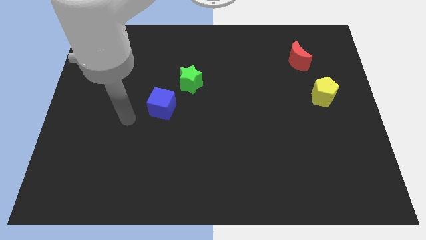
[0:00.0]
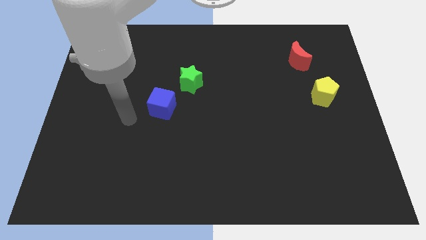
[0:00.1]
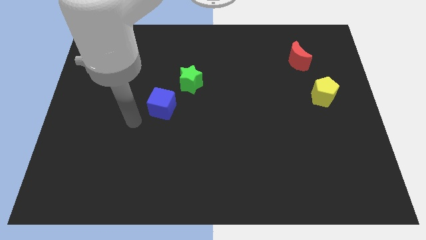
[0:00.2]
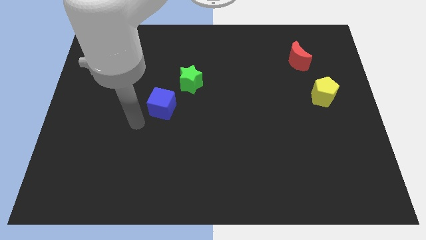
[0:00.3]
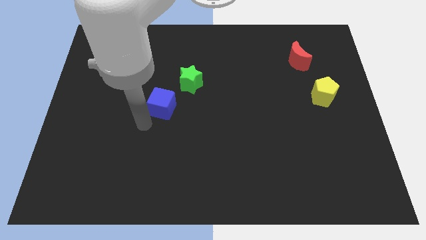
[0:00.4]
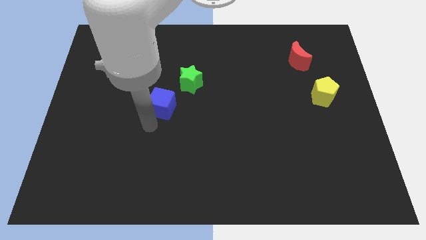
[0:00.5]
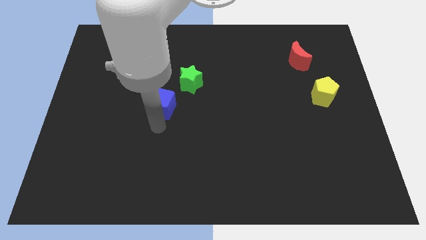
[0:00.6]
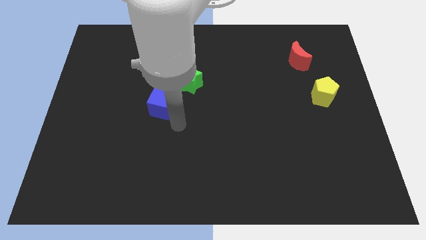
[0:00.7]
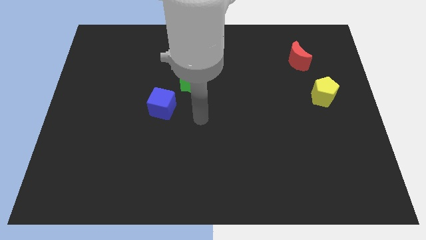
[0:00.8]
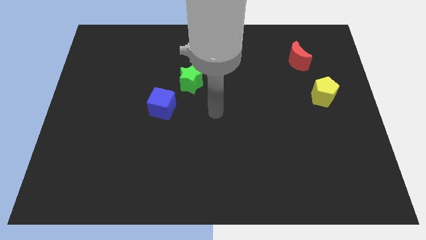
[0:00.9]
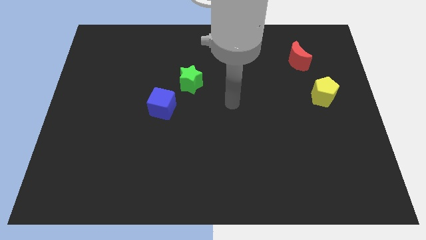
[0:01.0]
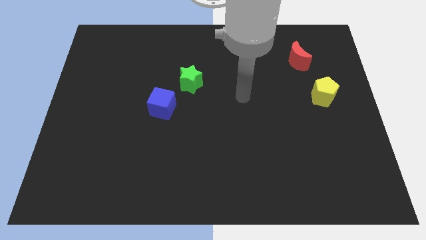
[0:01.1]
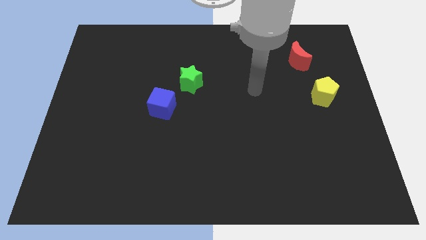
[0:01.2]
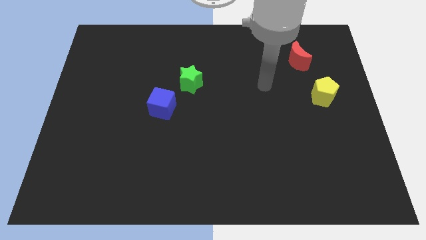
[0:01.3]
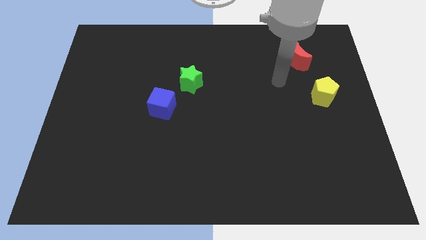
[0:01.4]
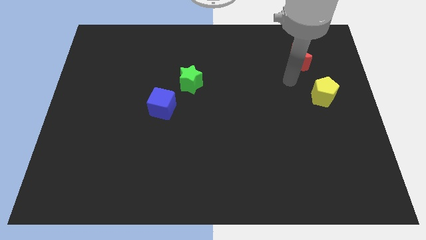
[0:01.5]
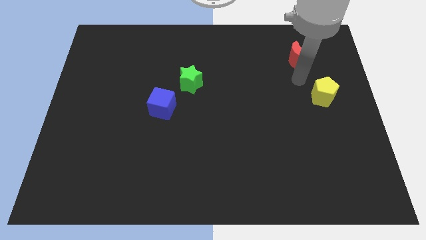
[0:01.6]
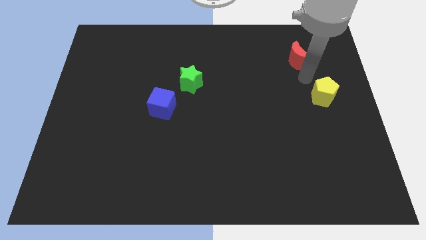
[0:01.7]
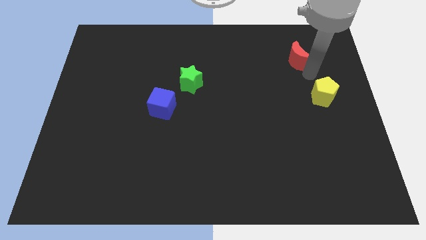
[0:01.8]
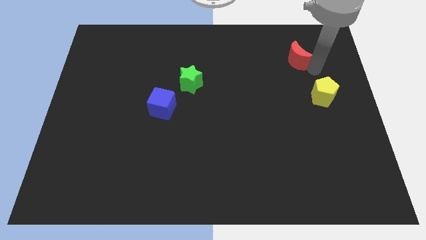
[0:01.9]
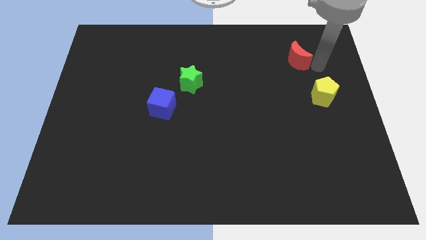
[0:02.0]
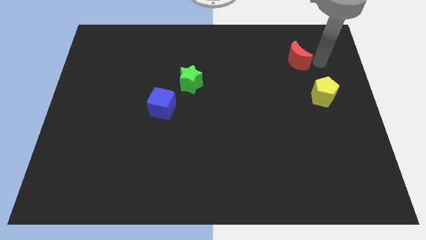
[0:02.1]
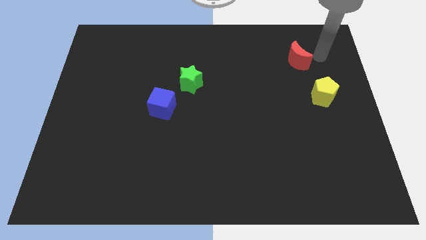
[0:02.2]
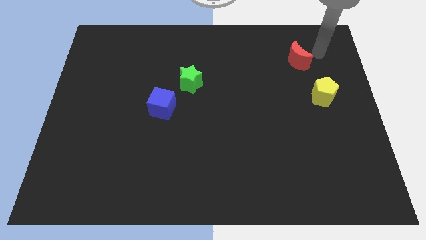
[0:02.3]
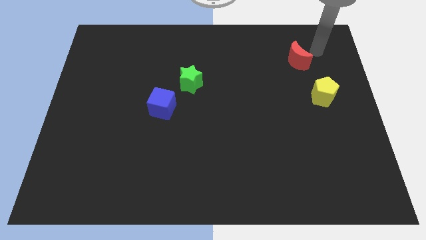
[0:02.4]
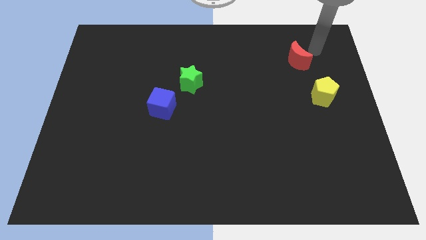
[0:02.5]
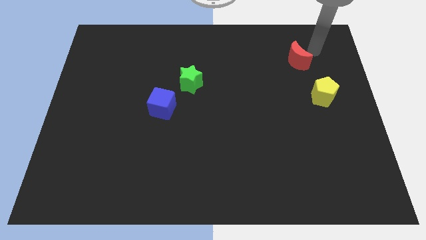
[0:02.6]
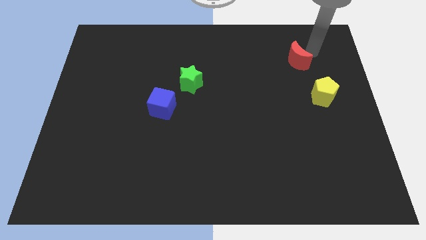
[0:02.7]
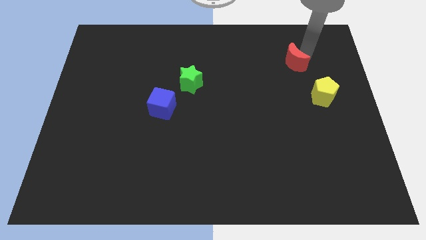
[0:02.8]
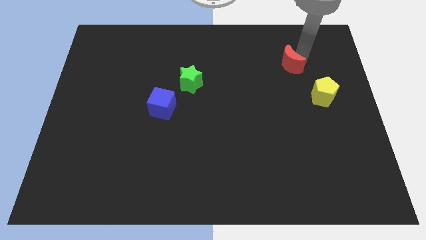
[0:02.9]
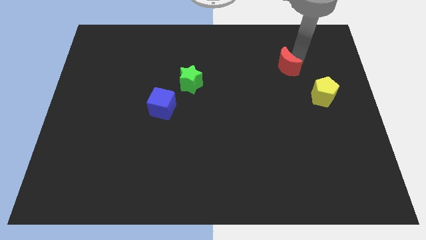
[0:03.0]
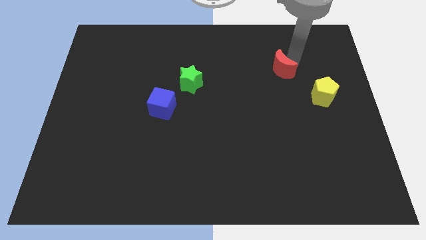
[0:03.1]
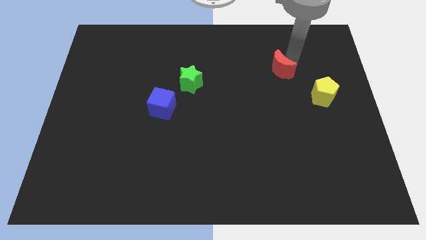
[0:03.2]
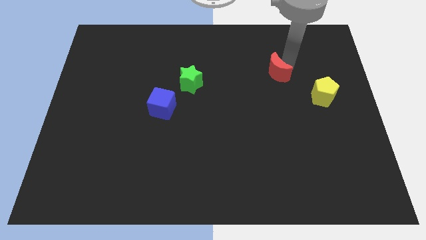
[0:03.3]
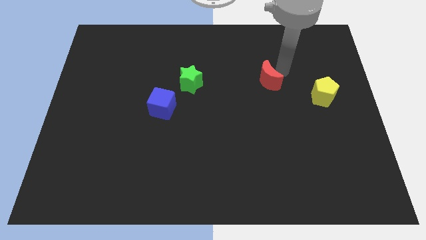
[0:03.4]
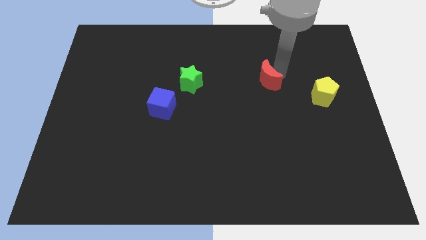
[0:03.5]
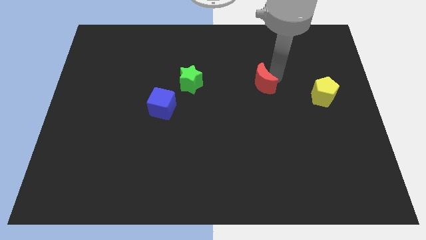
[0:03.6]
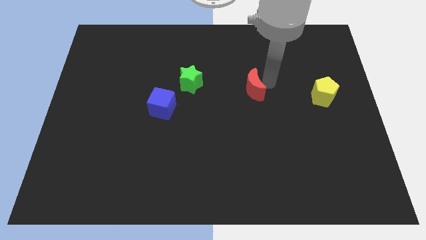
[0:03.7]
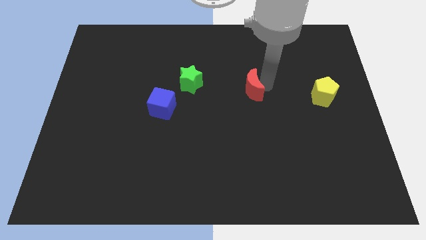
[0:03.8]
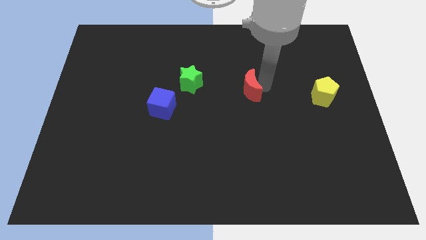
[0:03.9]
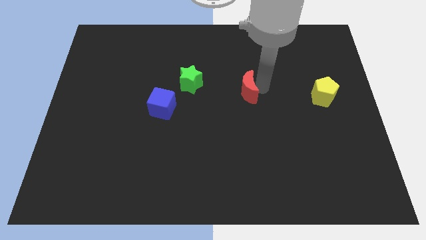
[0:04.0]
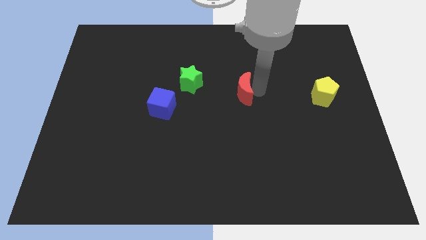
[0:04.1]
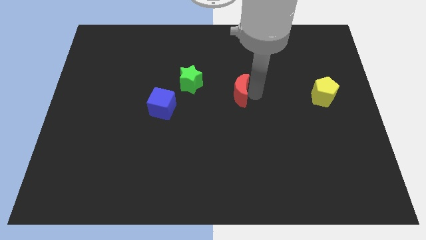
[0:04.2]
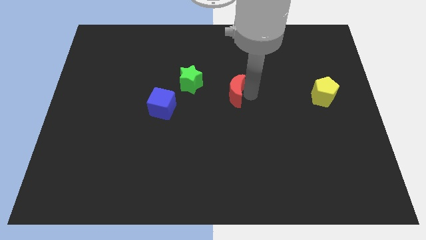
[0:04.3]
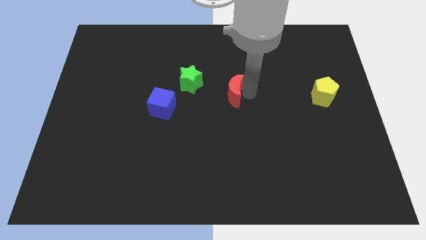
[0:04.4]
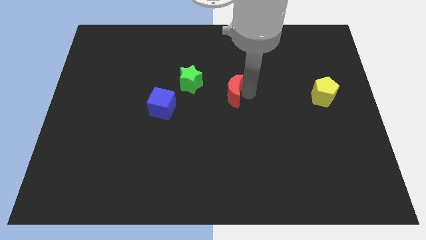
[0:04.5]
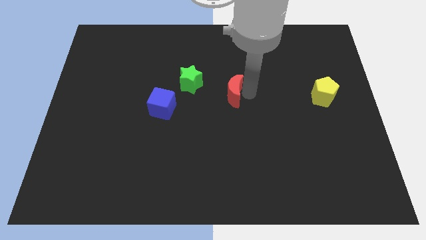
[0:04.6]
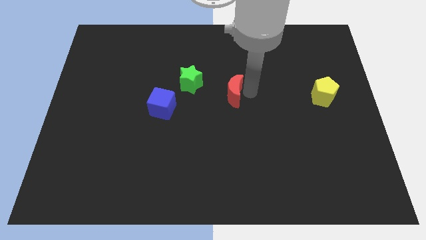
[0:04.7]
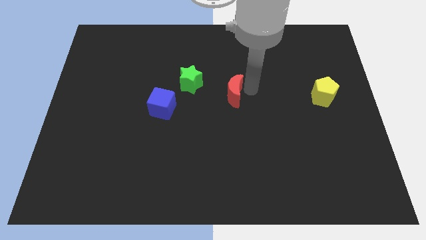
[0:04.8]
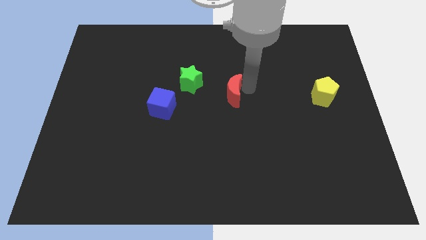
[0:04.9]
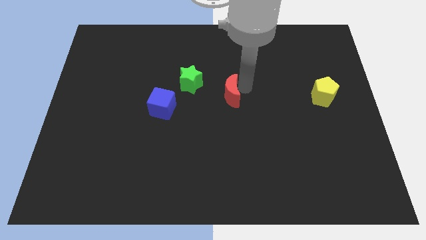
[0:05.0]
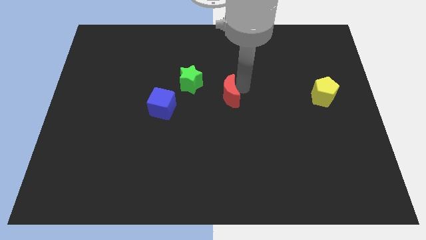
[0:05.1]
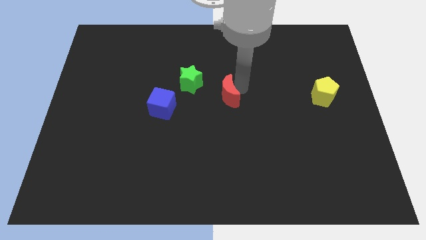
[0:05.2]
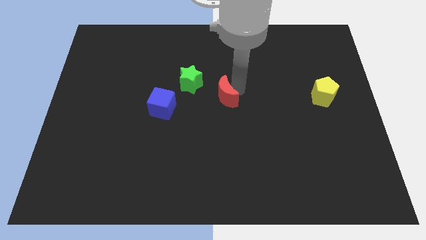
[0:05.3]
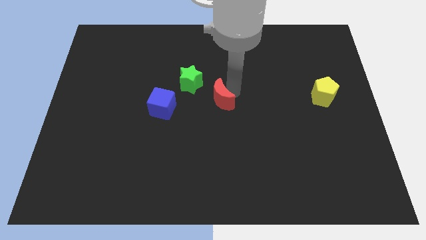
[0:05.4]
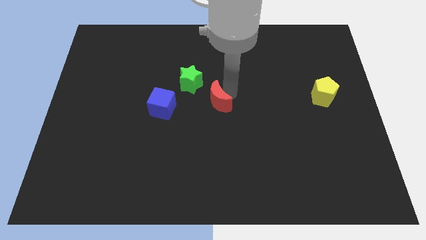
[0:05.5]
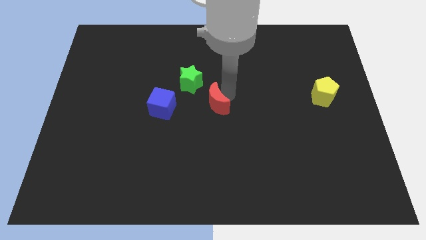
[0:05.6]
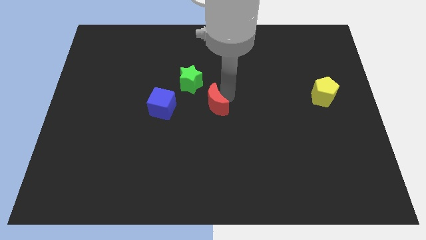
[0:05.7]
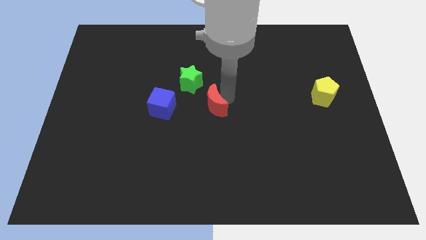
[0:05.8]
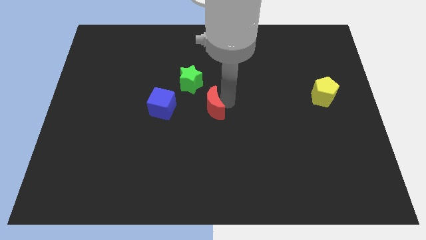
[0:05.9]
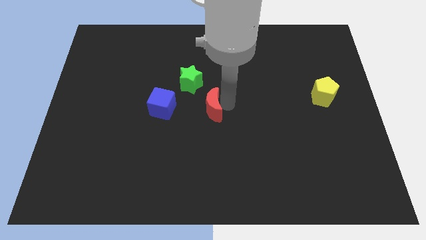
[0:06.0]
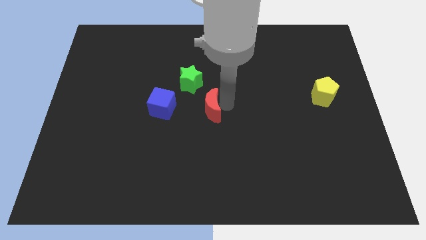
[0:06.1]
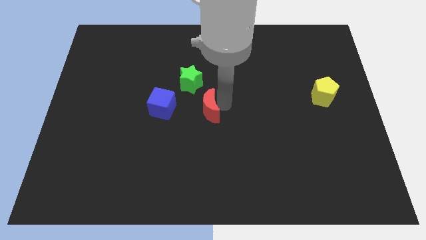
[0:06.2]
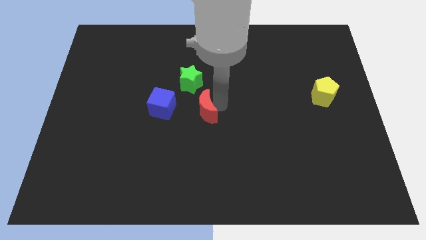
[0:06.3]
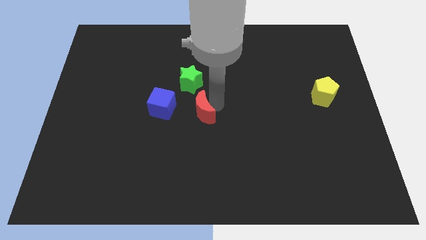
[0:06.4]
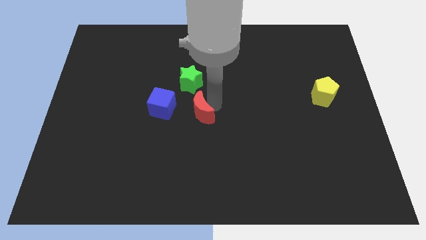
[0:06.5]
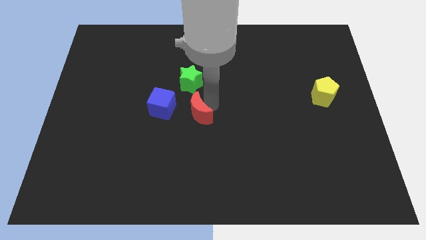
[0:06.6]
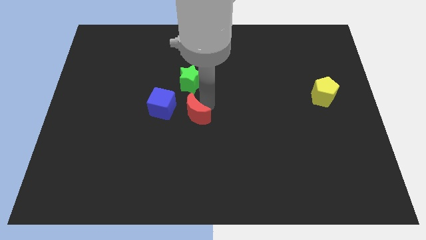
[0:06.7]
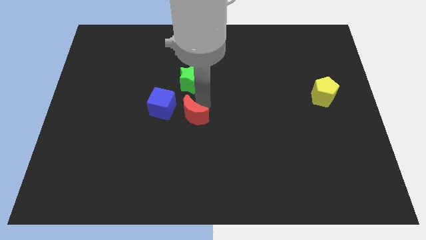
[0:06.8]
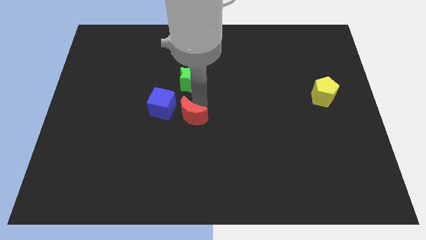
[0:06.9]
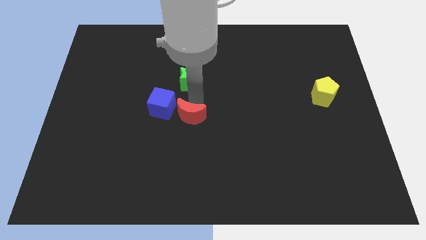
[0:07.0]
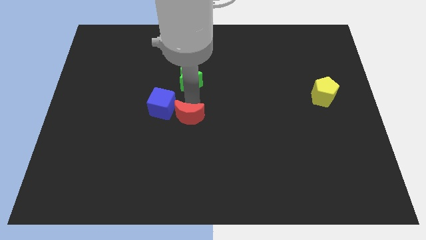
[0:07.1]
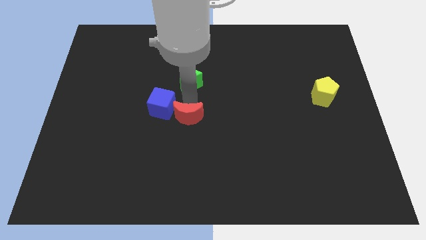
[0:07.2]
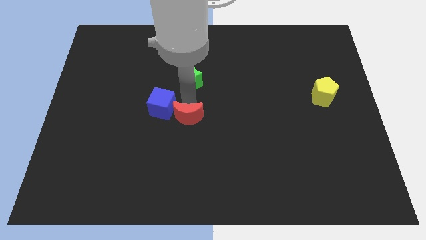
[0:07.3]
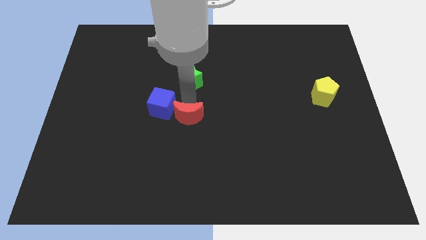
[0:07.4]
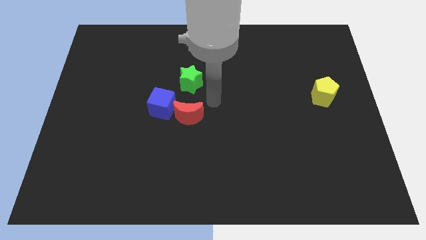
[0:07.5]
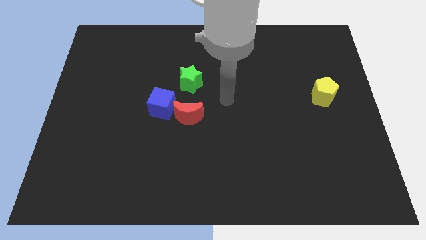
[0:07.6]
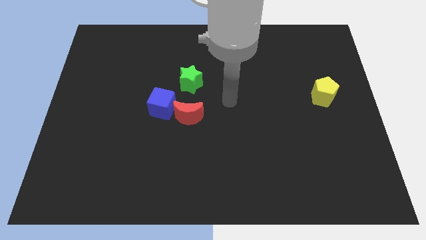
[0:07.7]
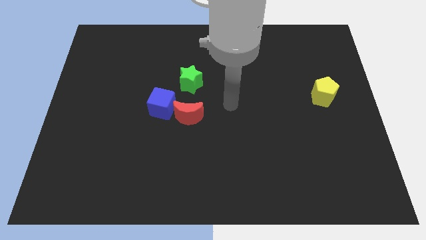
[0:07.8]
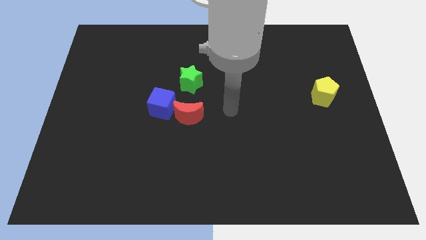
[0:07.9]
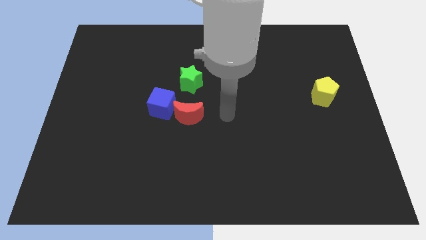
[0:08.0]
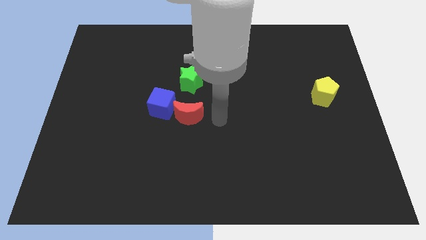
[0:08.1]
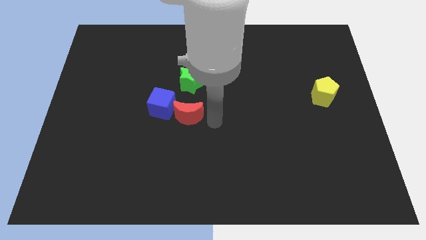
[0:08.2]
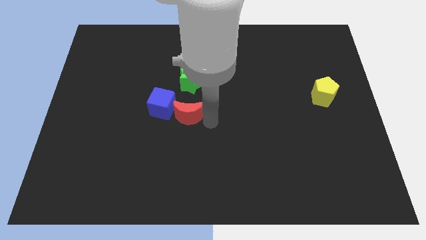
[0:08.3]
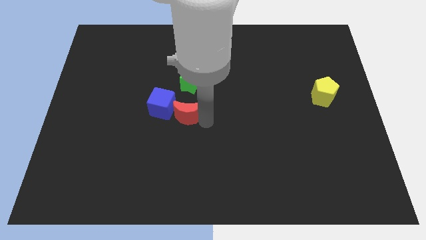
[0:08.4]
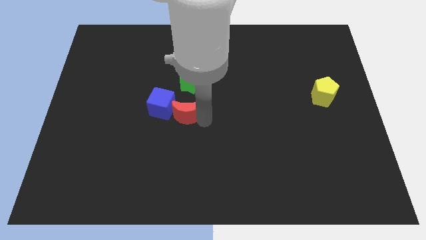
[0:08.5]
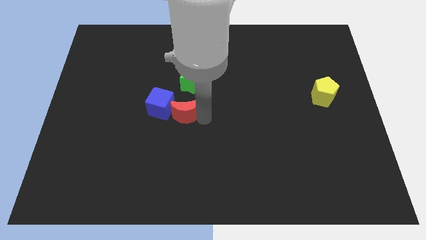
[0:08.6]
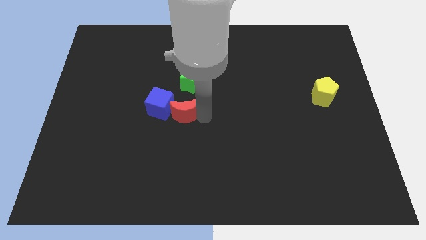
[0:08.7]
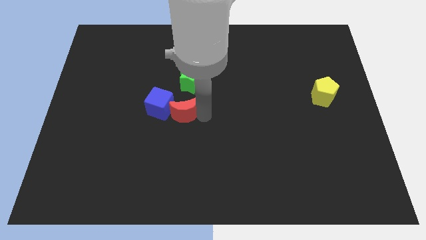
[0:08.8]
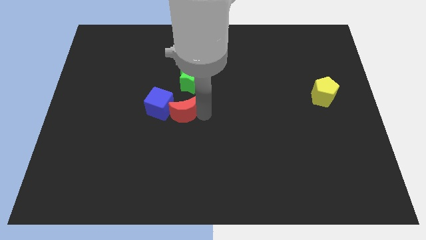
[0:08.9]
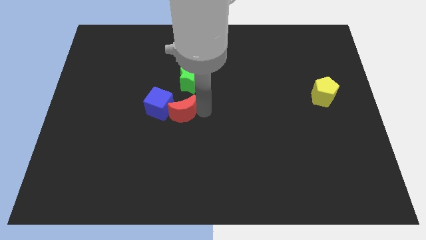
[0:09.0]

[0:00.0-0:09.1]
move the moon close to the blue block
